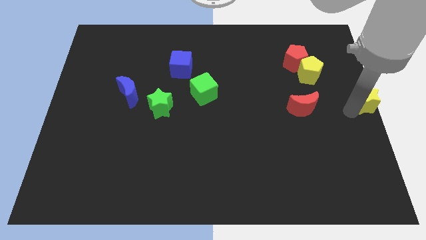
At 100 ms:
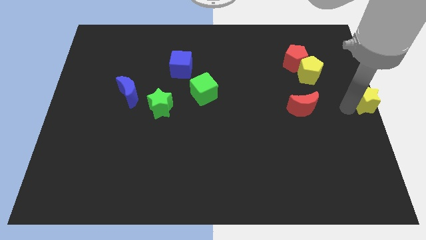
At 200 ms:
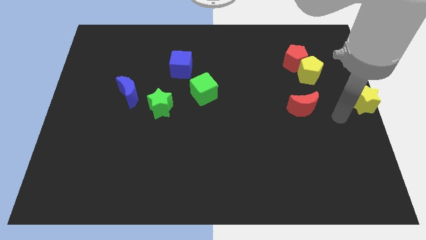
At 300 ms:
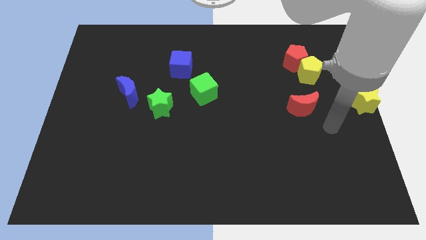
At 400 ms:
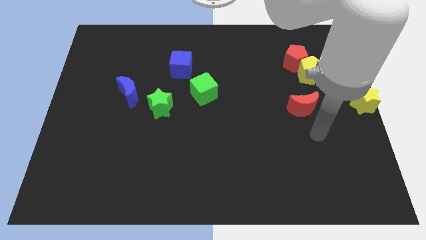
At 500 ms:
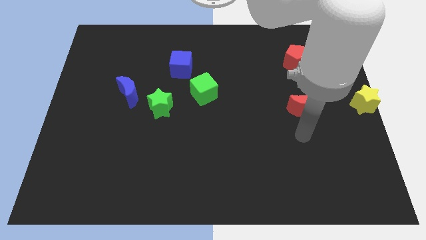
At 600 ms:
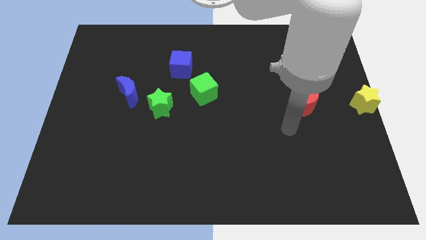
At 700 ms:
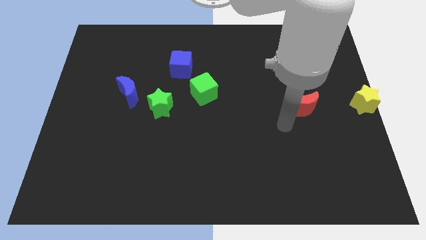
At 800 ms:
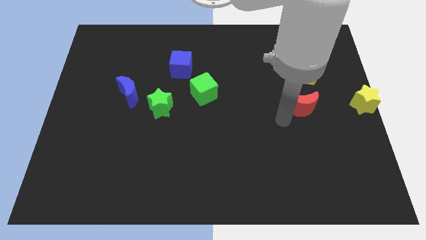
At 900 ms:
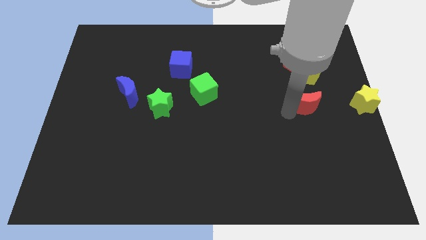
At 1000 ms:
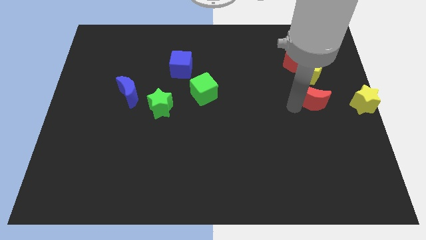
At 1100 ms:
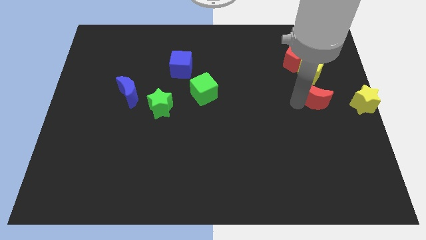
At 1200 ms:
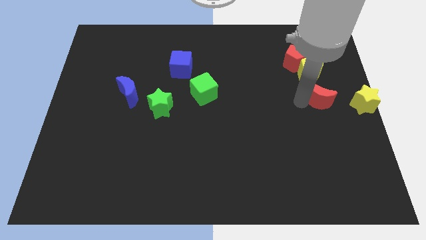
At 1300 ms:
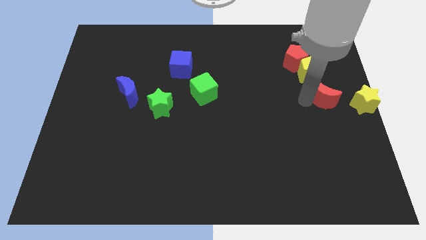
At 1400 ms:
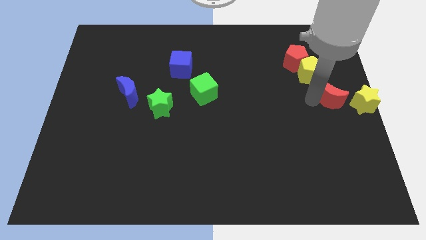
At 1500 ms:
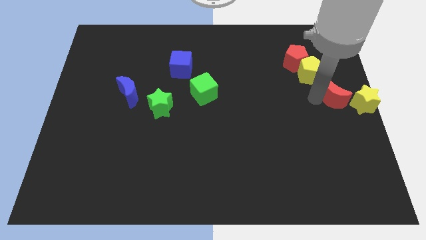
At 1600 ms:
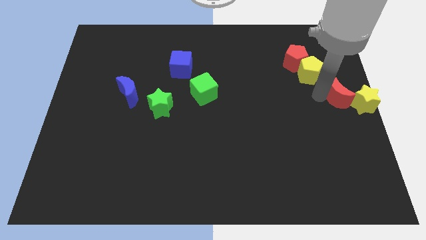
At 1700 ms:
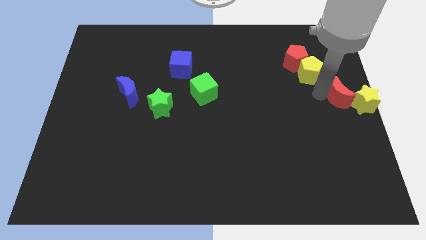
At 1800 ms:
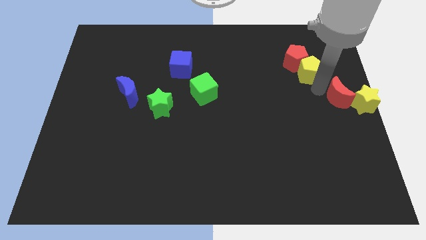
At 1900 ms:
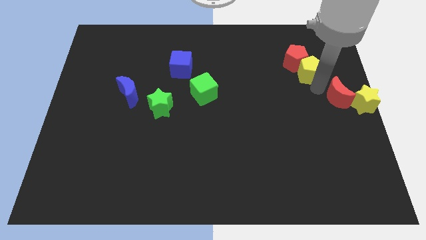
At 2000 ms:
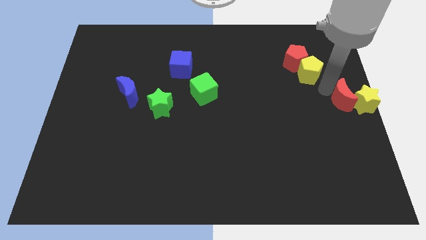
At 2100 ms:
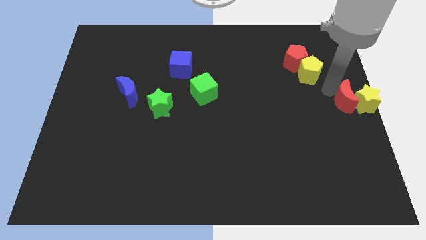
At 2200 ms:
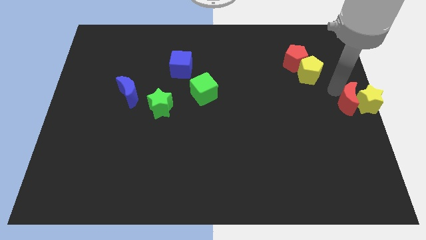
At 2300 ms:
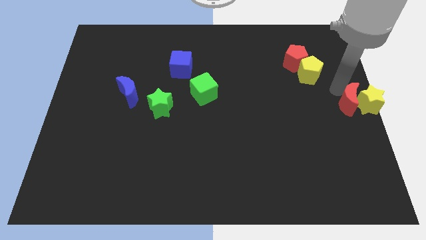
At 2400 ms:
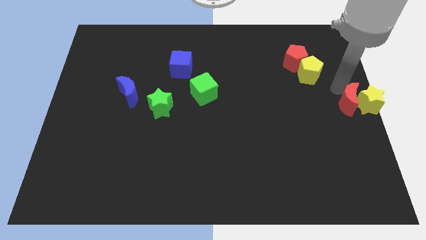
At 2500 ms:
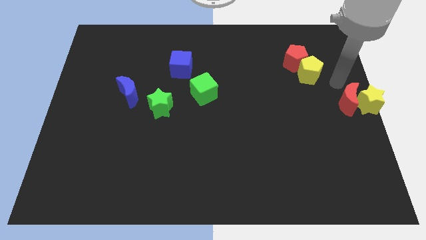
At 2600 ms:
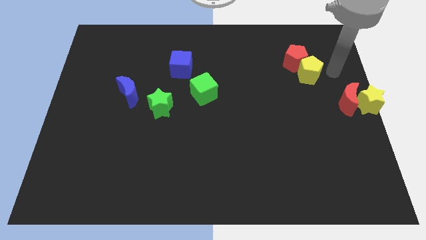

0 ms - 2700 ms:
push the red moon towards the left side of yellow star

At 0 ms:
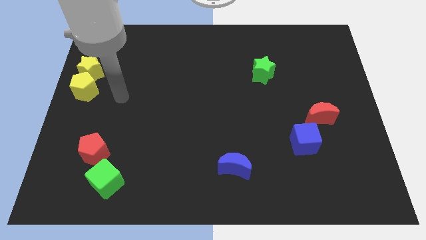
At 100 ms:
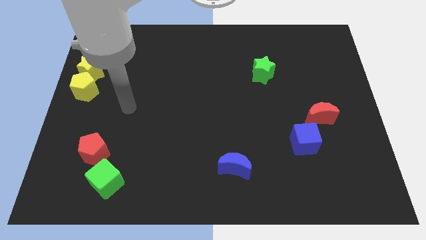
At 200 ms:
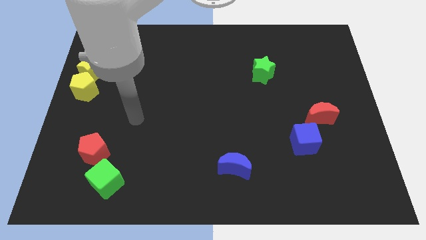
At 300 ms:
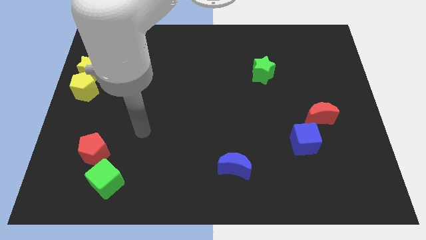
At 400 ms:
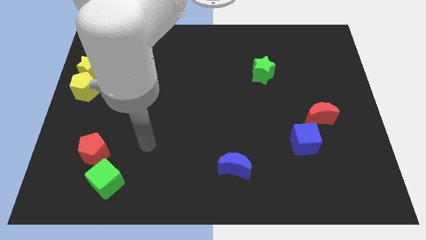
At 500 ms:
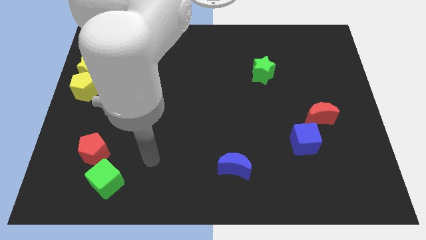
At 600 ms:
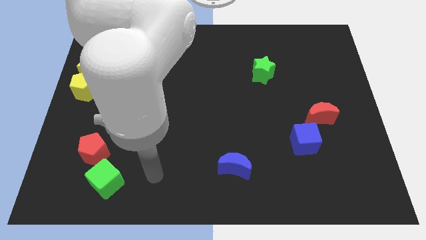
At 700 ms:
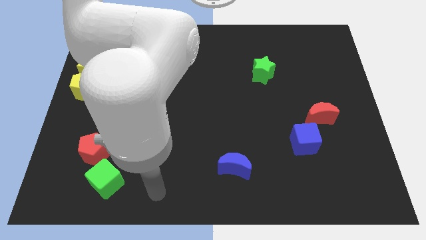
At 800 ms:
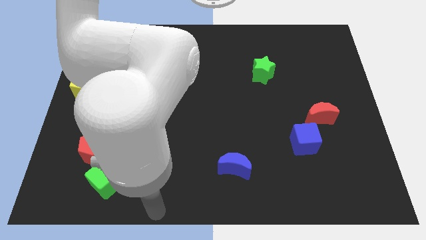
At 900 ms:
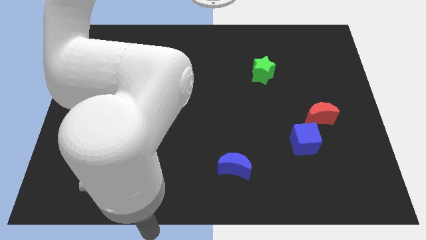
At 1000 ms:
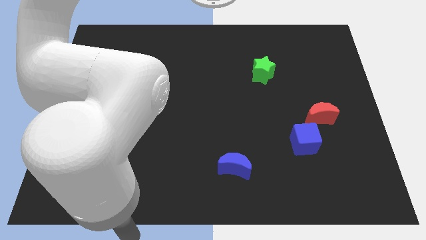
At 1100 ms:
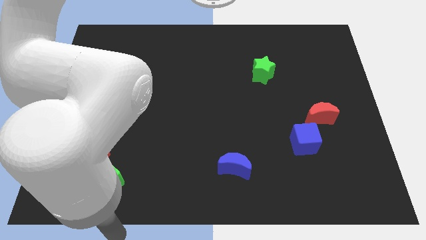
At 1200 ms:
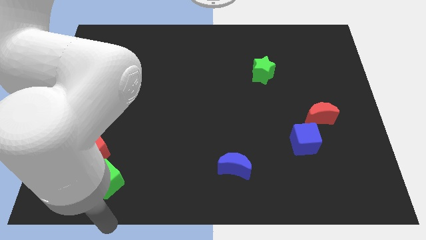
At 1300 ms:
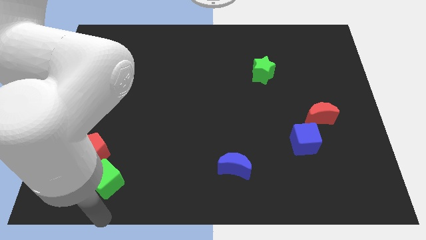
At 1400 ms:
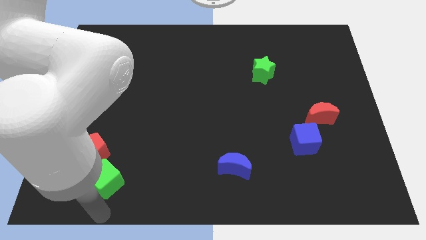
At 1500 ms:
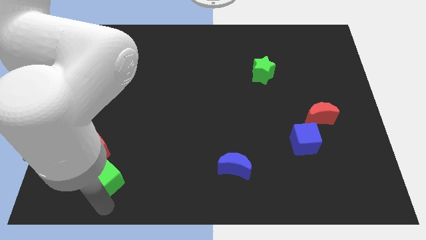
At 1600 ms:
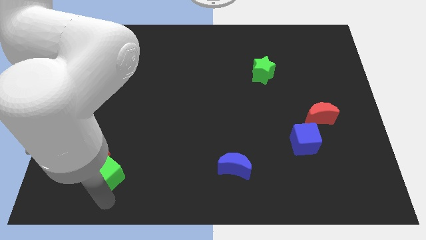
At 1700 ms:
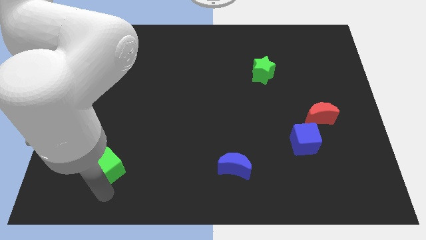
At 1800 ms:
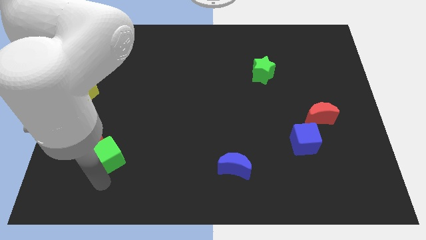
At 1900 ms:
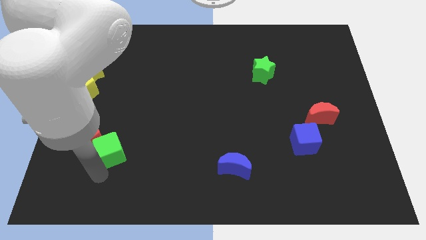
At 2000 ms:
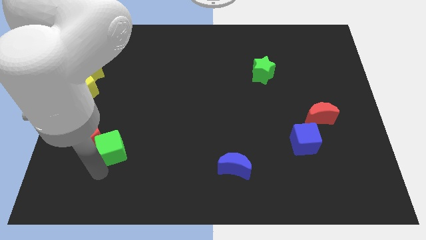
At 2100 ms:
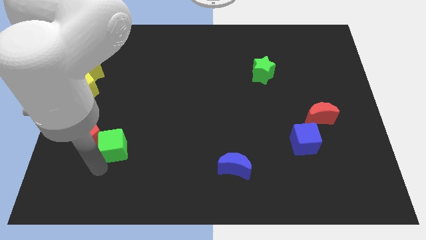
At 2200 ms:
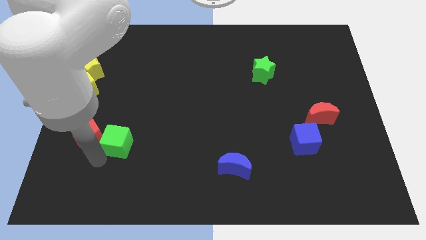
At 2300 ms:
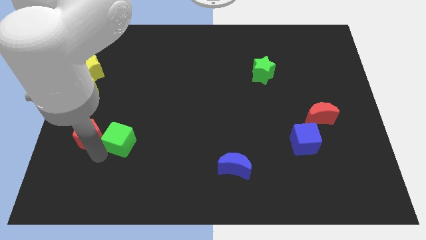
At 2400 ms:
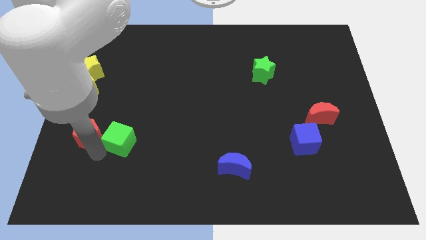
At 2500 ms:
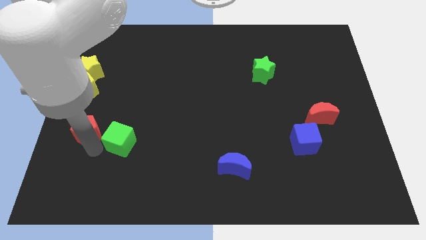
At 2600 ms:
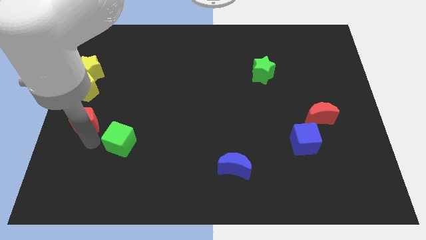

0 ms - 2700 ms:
push green cube in to red pentagon

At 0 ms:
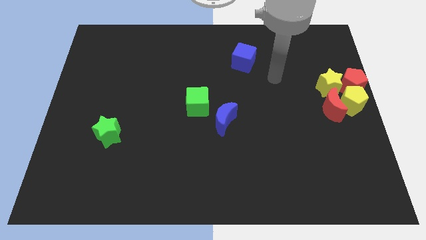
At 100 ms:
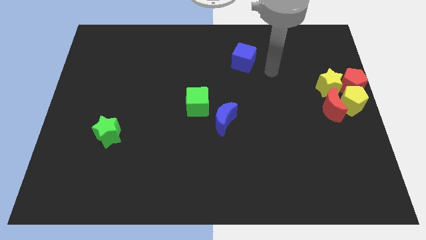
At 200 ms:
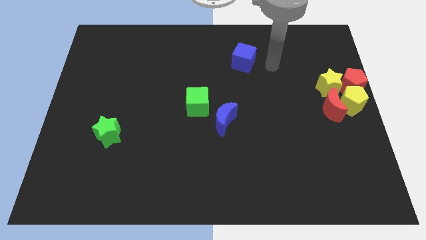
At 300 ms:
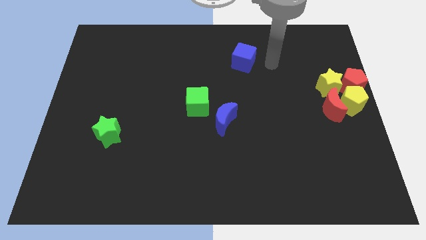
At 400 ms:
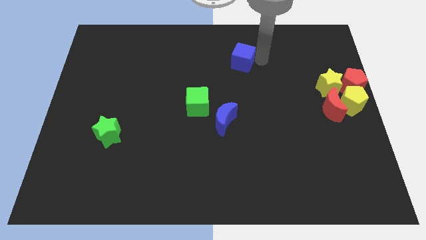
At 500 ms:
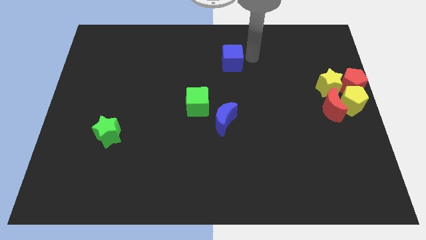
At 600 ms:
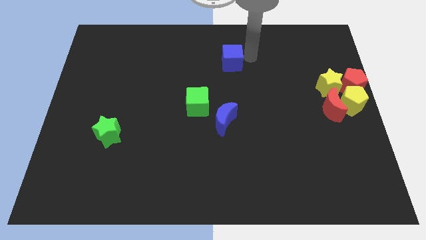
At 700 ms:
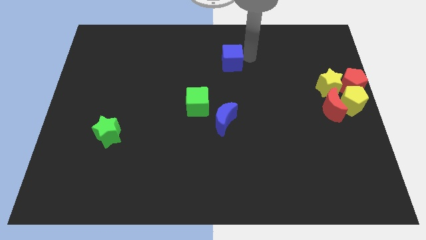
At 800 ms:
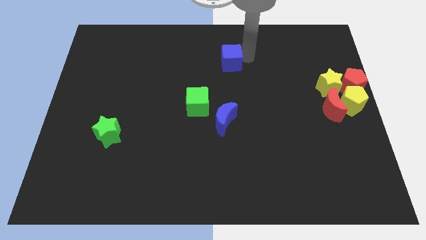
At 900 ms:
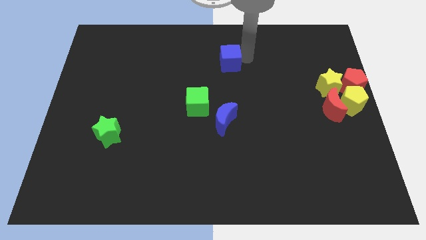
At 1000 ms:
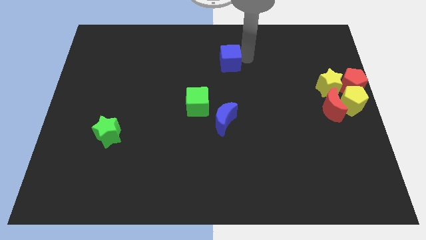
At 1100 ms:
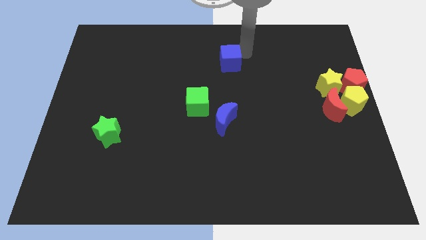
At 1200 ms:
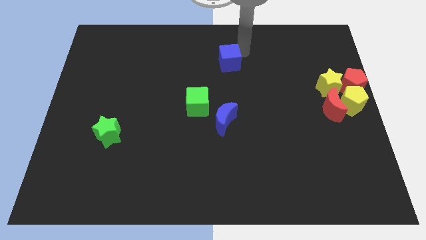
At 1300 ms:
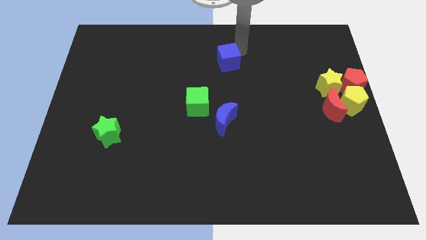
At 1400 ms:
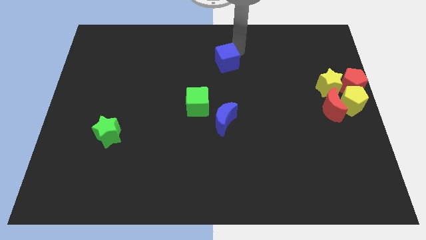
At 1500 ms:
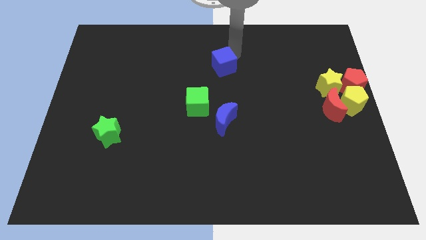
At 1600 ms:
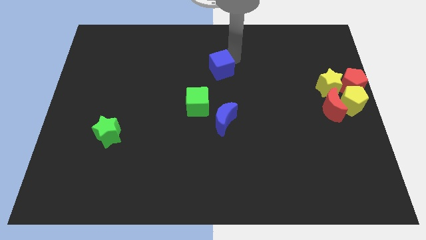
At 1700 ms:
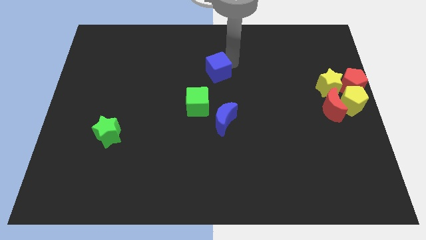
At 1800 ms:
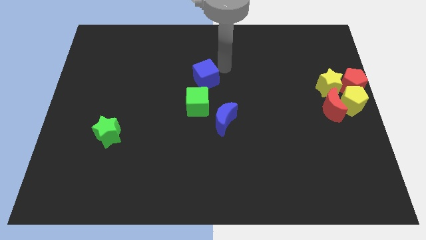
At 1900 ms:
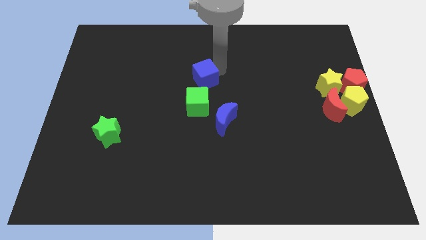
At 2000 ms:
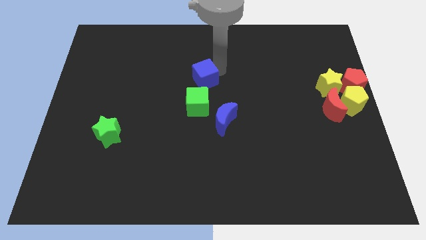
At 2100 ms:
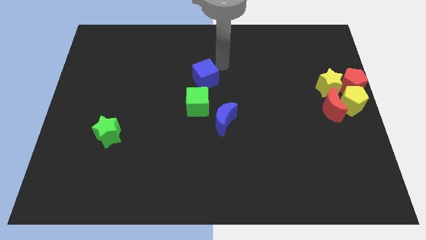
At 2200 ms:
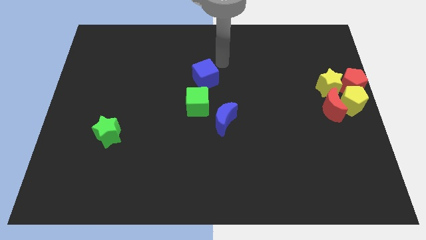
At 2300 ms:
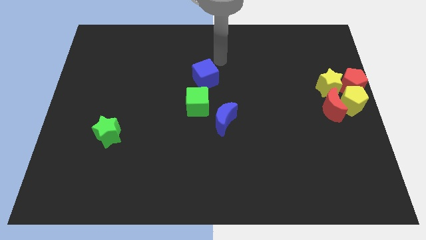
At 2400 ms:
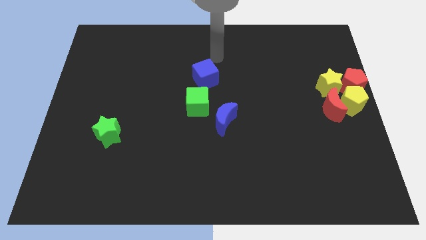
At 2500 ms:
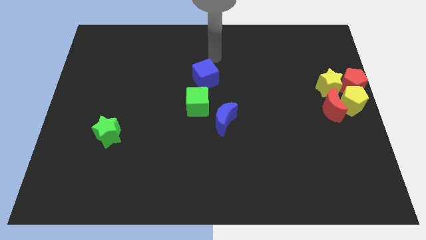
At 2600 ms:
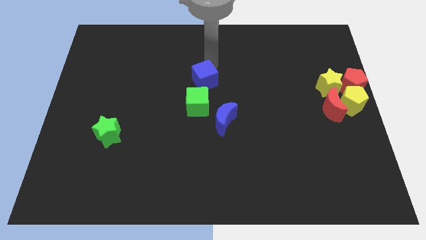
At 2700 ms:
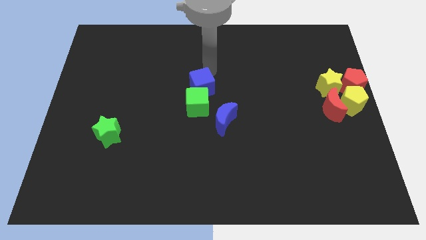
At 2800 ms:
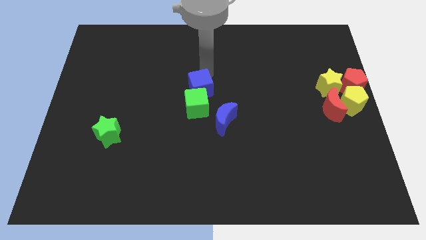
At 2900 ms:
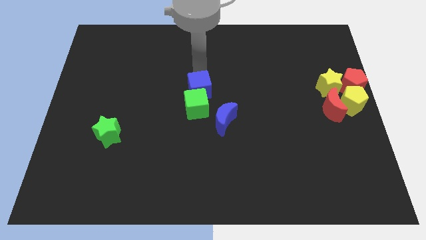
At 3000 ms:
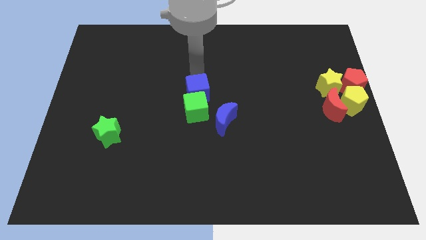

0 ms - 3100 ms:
push blue cube above green cube

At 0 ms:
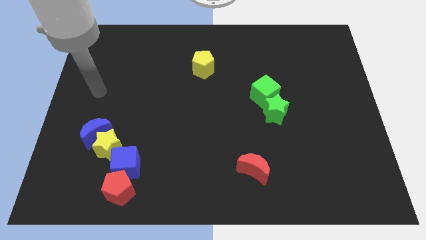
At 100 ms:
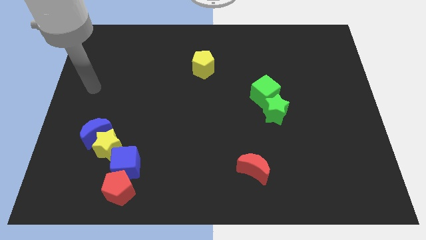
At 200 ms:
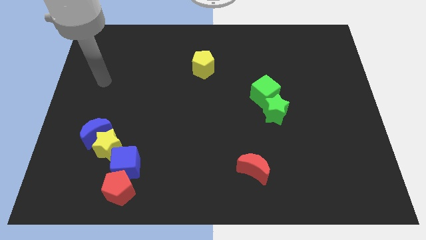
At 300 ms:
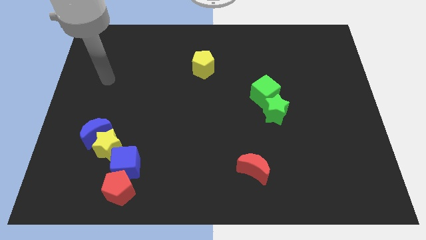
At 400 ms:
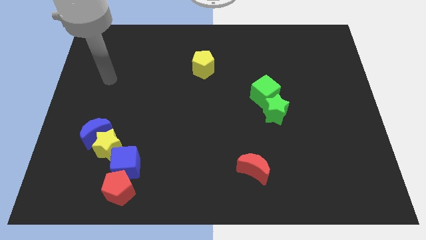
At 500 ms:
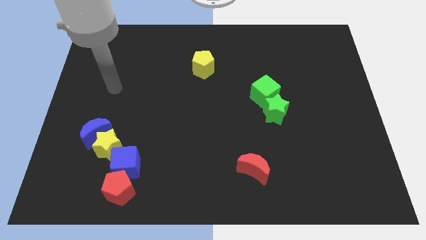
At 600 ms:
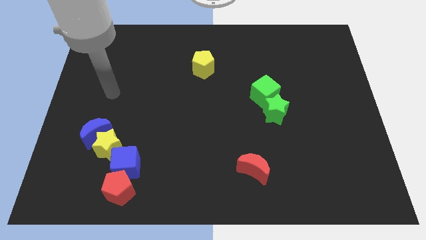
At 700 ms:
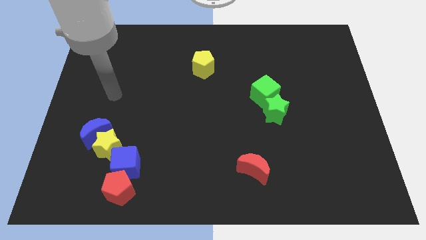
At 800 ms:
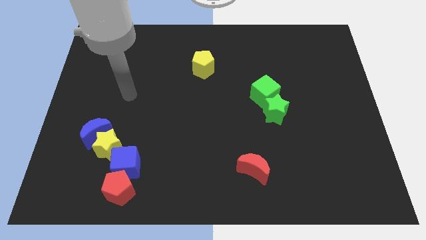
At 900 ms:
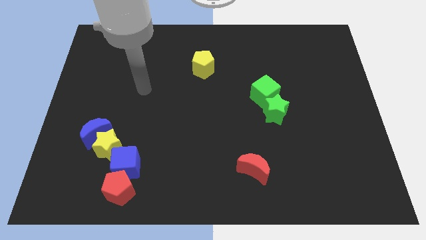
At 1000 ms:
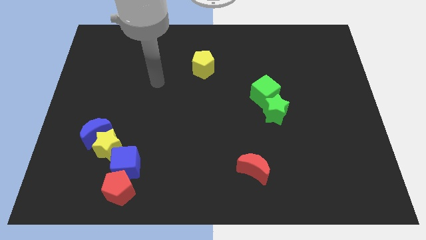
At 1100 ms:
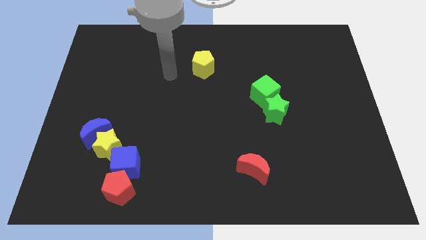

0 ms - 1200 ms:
point your arm at the left of the yellow pentagon
